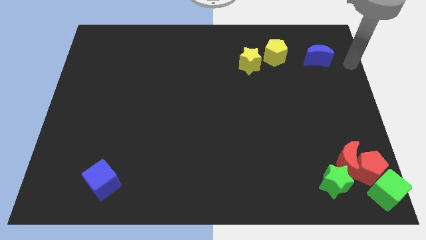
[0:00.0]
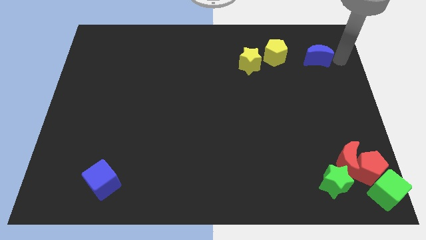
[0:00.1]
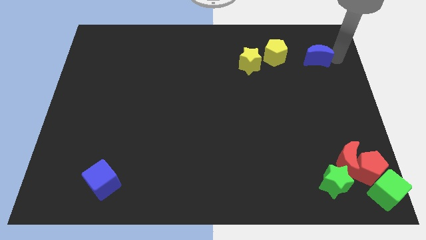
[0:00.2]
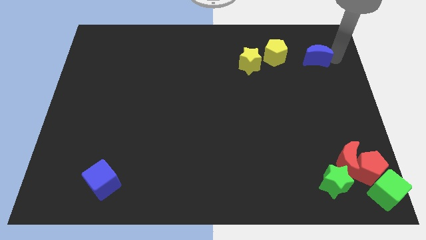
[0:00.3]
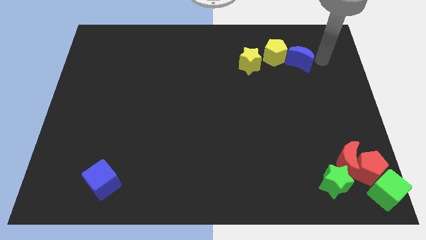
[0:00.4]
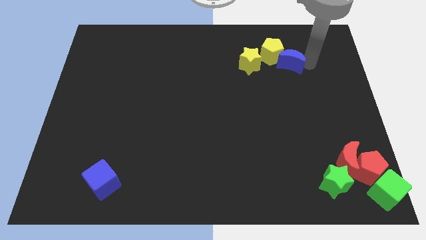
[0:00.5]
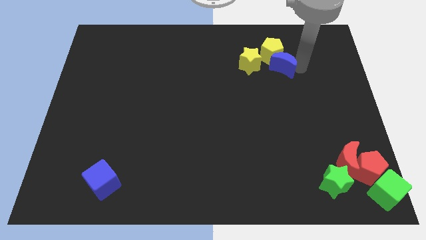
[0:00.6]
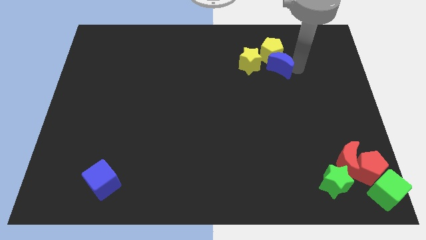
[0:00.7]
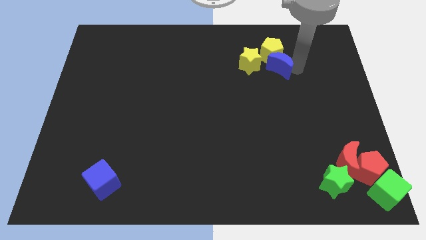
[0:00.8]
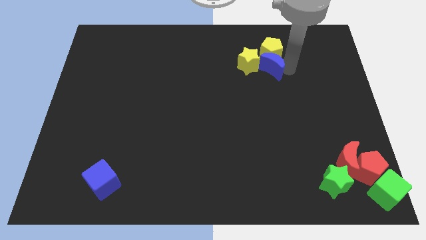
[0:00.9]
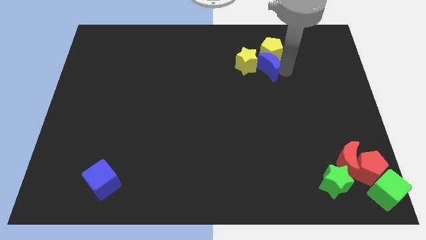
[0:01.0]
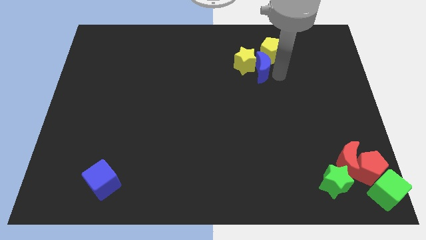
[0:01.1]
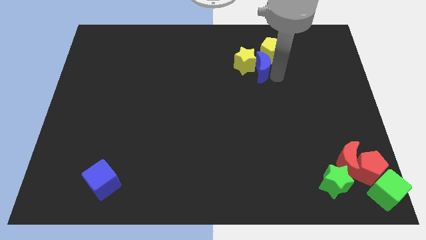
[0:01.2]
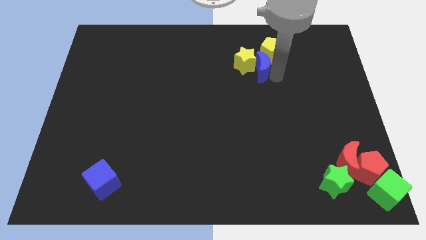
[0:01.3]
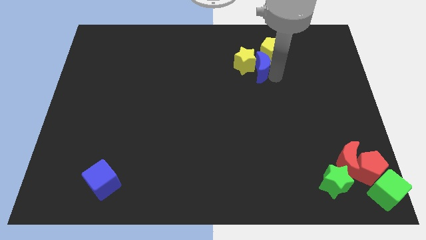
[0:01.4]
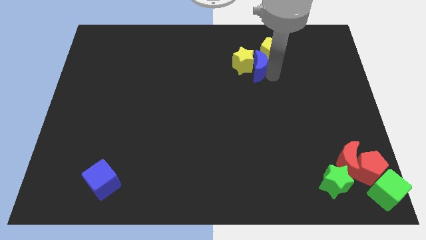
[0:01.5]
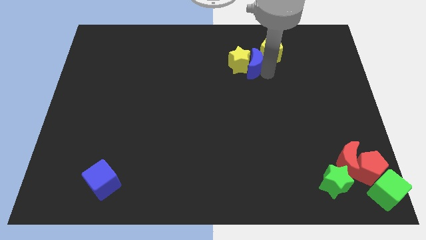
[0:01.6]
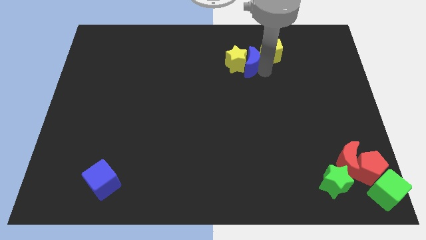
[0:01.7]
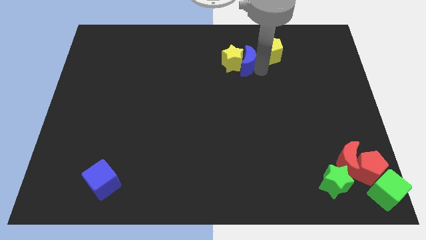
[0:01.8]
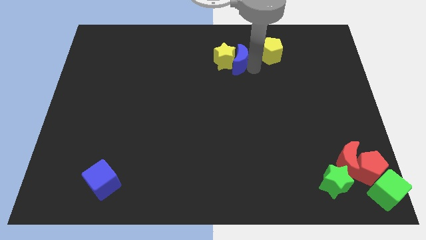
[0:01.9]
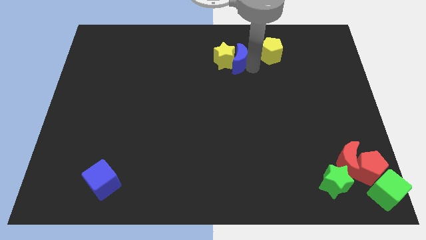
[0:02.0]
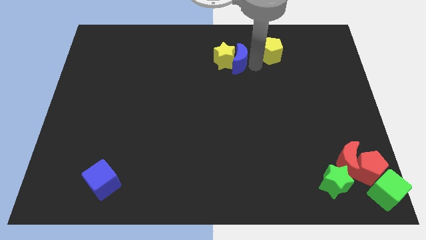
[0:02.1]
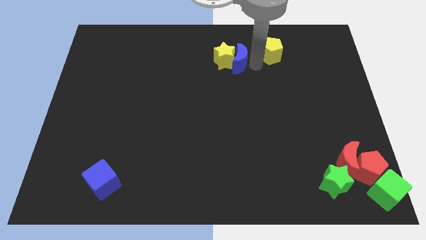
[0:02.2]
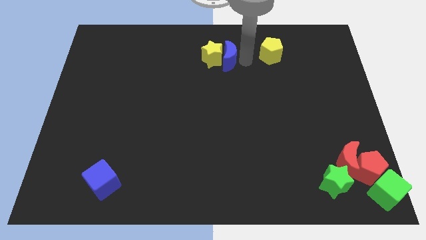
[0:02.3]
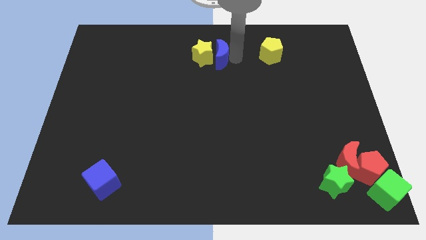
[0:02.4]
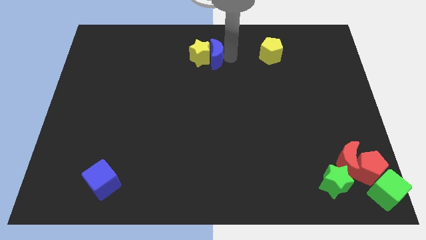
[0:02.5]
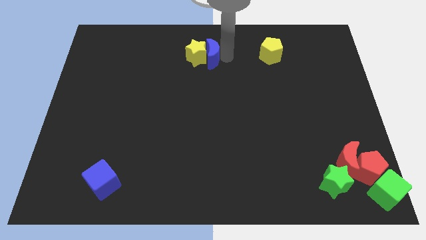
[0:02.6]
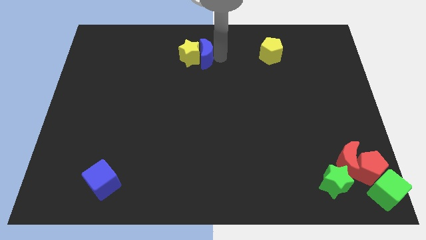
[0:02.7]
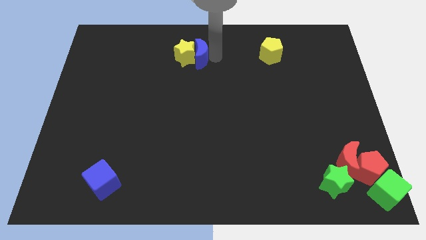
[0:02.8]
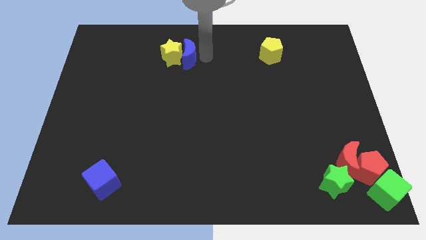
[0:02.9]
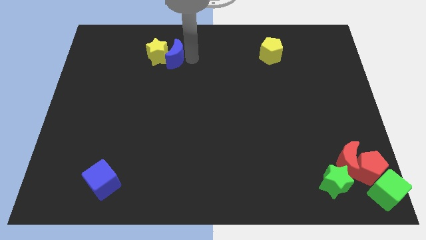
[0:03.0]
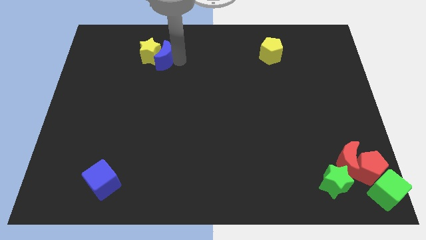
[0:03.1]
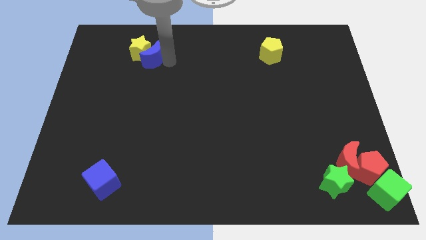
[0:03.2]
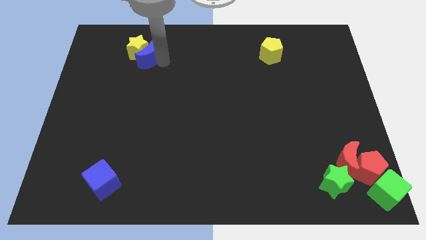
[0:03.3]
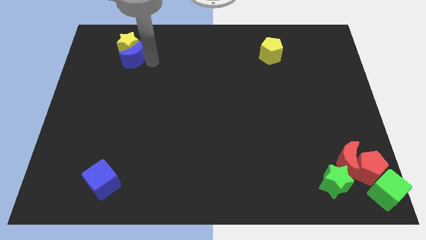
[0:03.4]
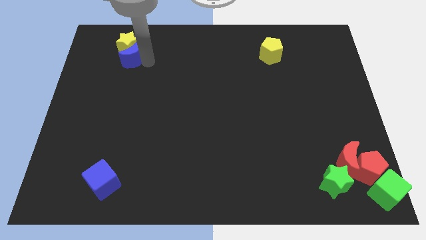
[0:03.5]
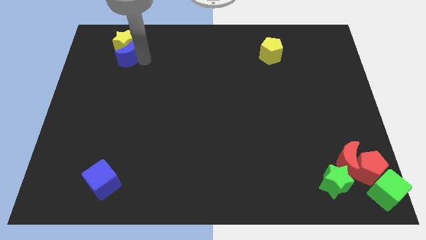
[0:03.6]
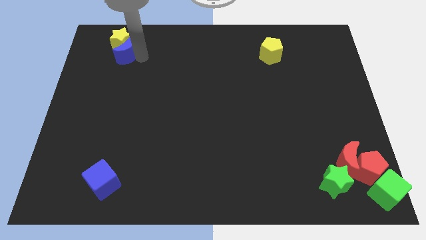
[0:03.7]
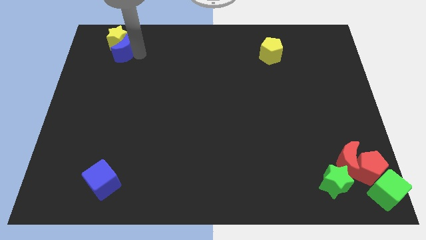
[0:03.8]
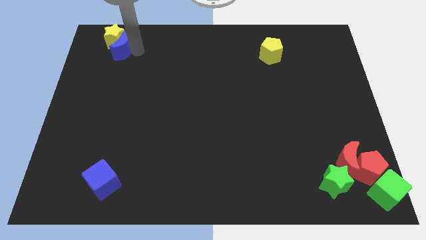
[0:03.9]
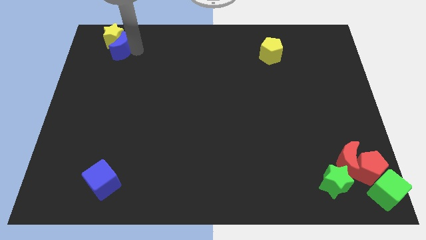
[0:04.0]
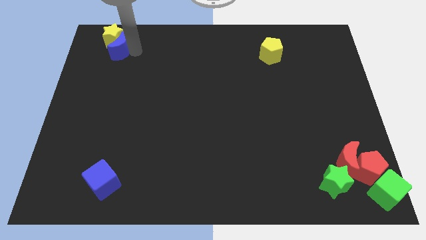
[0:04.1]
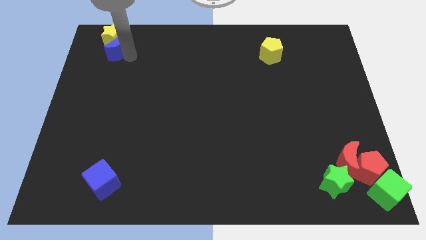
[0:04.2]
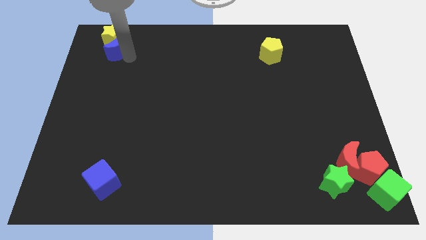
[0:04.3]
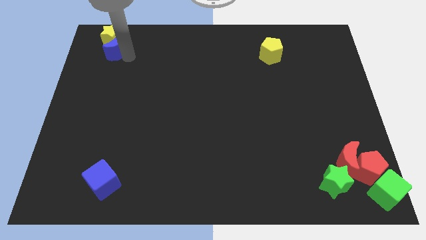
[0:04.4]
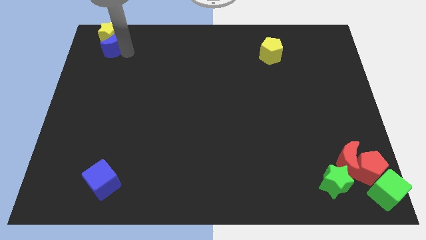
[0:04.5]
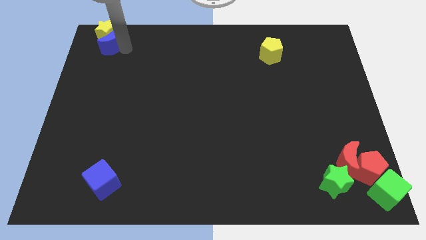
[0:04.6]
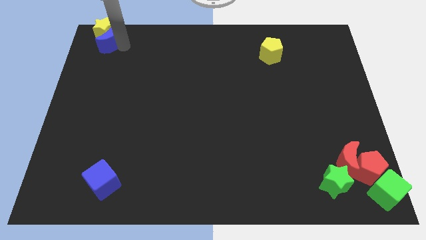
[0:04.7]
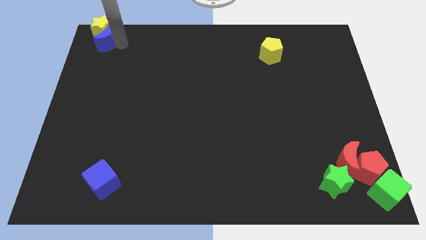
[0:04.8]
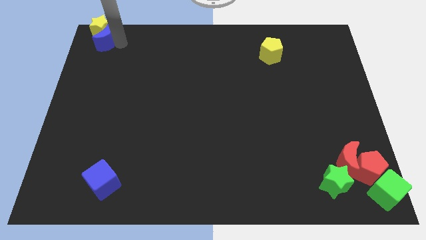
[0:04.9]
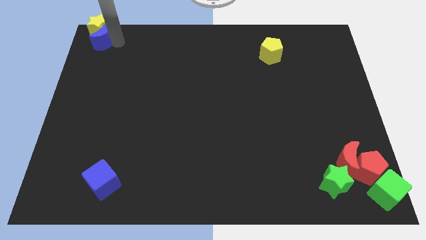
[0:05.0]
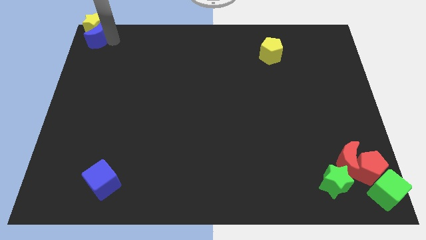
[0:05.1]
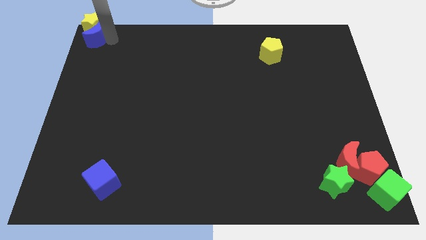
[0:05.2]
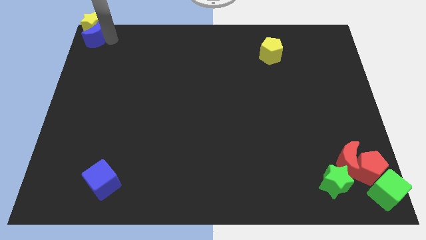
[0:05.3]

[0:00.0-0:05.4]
push the yellow star to the top left corner of the board with the blue moon

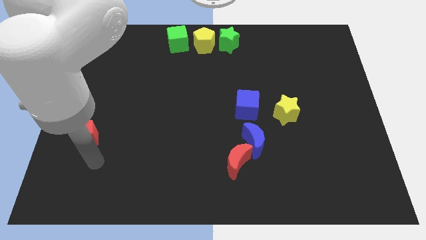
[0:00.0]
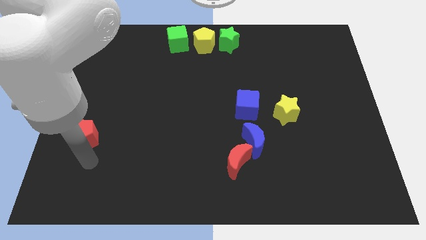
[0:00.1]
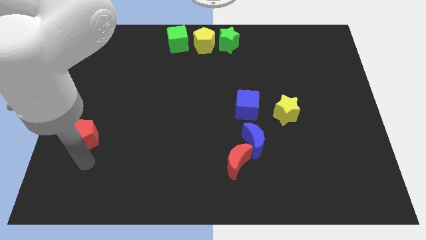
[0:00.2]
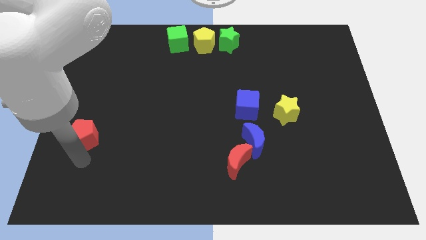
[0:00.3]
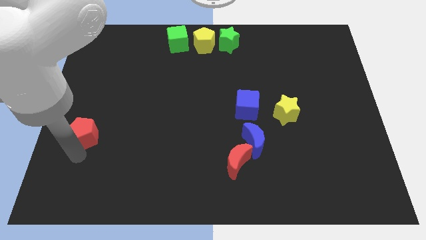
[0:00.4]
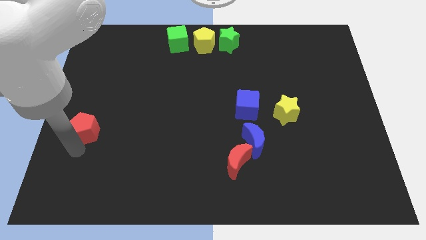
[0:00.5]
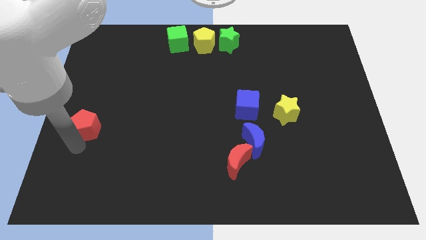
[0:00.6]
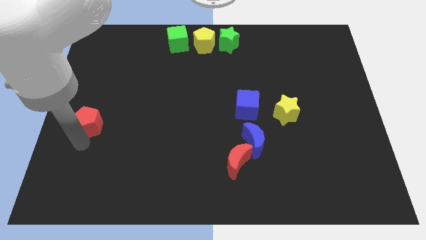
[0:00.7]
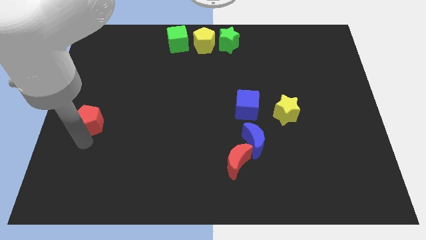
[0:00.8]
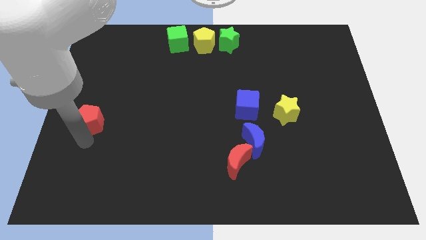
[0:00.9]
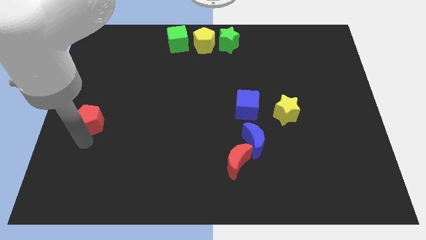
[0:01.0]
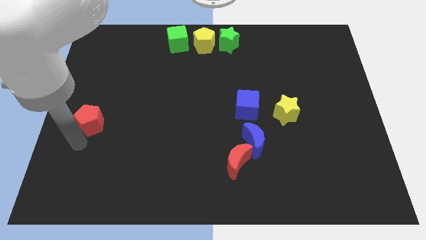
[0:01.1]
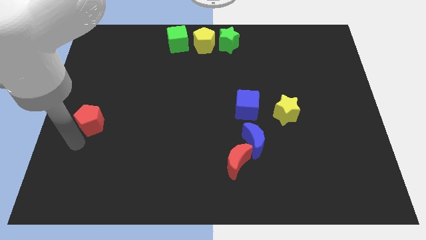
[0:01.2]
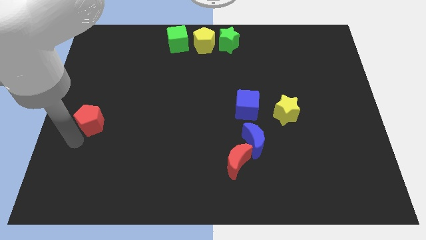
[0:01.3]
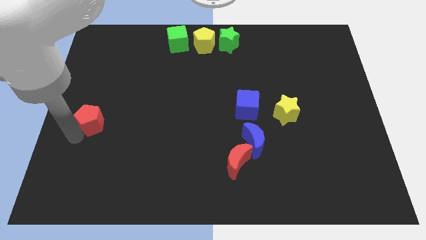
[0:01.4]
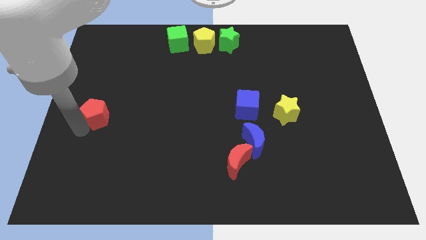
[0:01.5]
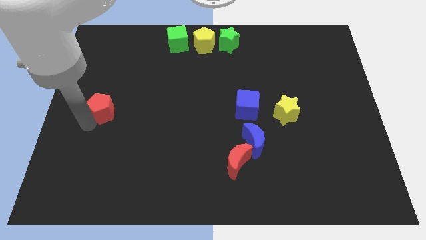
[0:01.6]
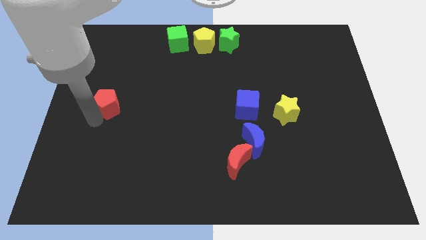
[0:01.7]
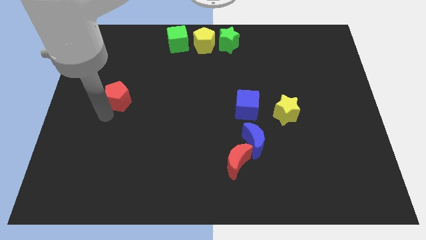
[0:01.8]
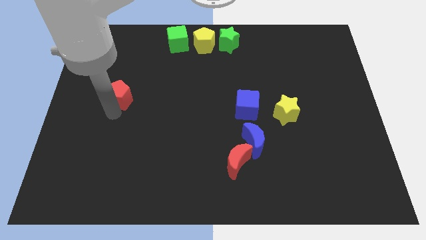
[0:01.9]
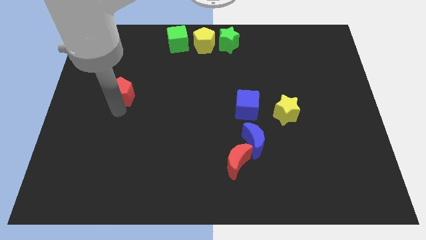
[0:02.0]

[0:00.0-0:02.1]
slide red pentagon up to the left of blue cube

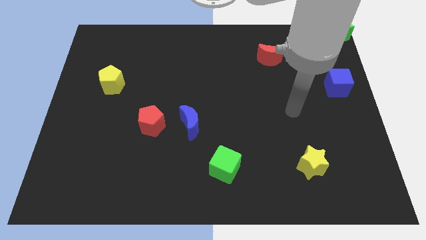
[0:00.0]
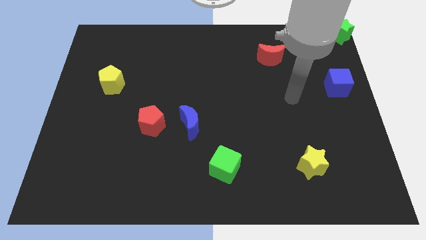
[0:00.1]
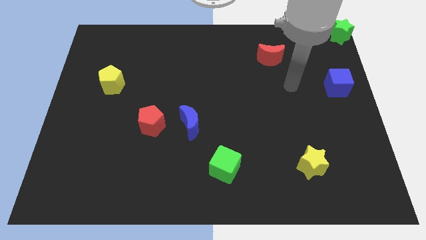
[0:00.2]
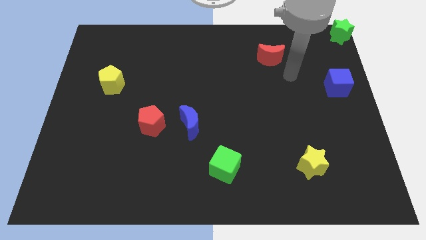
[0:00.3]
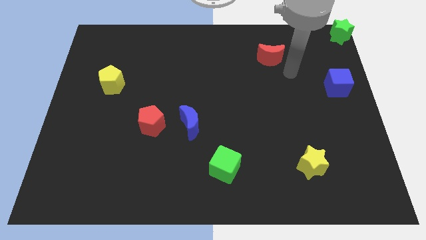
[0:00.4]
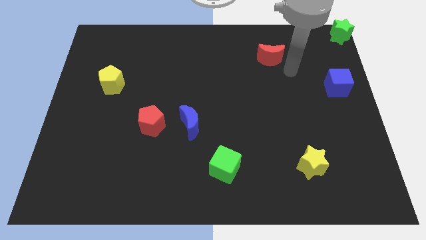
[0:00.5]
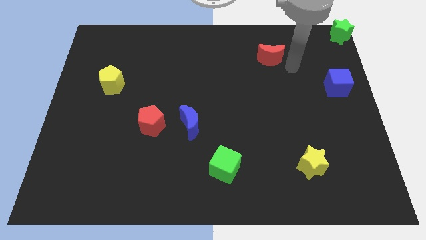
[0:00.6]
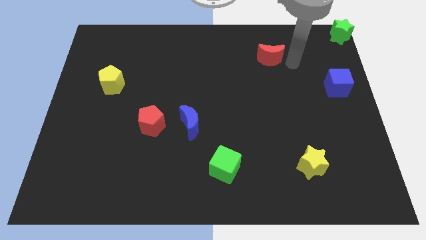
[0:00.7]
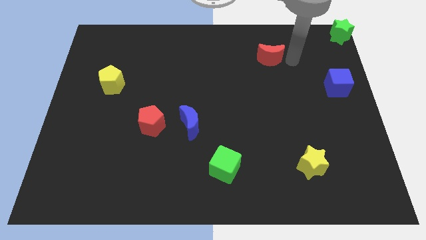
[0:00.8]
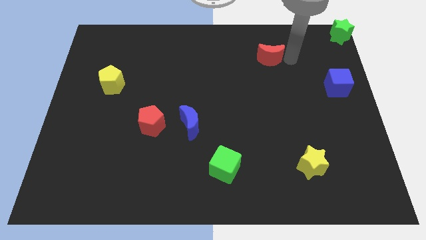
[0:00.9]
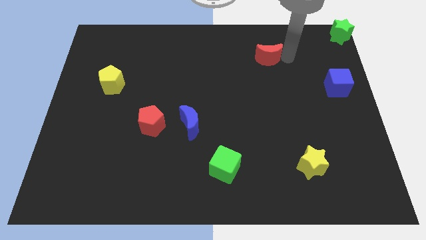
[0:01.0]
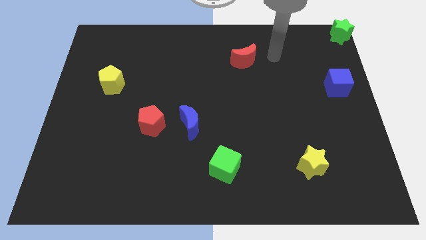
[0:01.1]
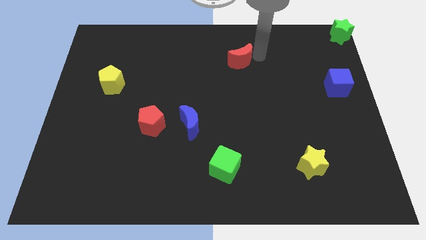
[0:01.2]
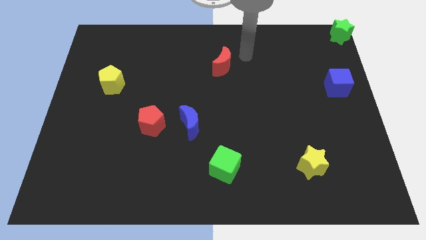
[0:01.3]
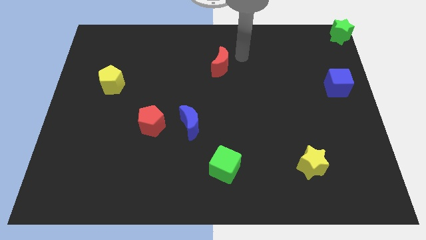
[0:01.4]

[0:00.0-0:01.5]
place the red crescent above the green cube
